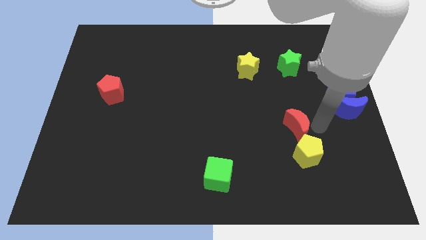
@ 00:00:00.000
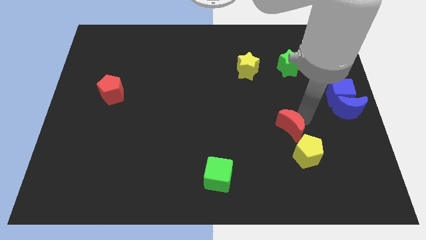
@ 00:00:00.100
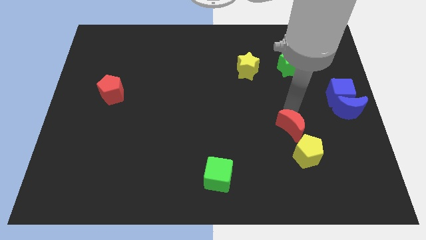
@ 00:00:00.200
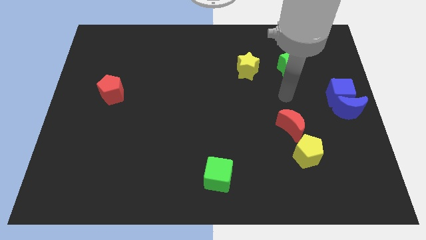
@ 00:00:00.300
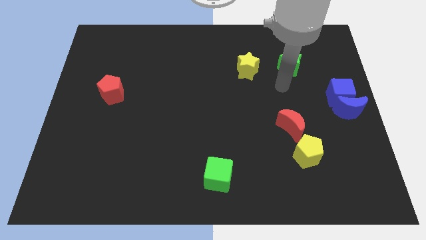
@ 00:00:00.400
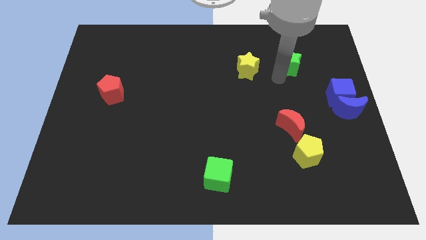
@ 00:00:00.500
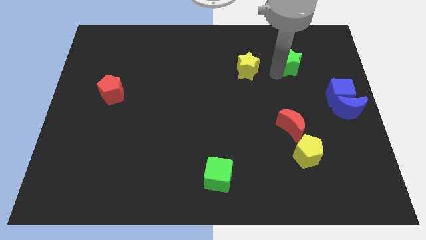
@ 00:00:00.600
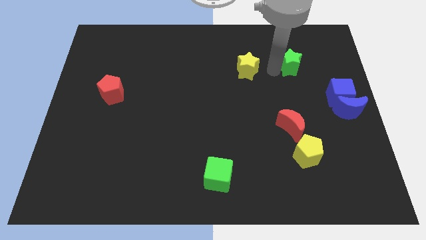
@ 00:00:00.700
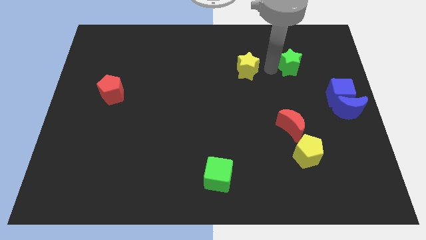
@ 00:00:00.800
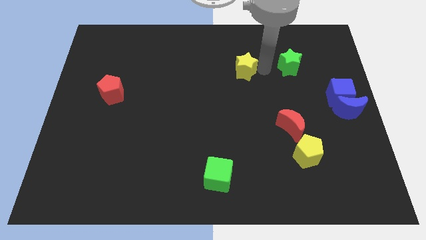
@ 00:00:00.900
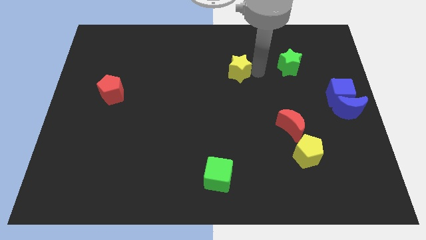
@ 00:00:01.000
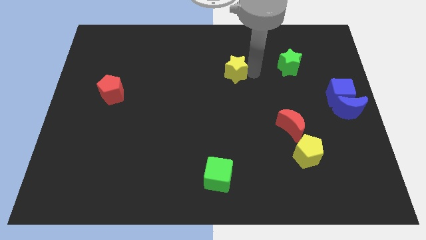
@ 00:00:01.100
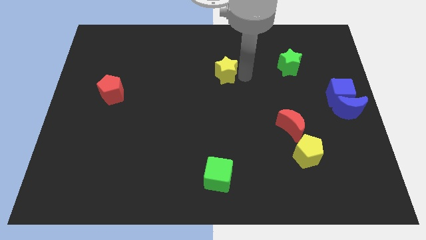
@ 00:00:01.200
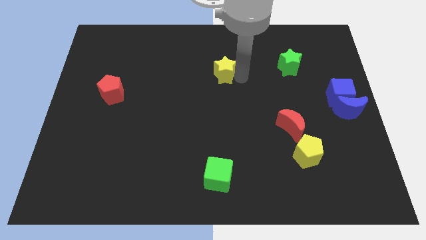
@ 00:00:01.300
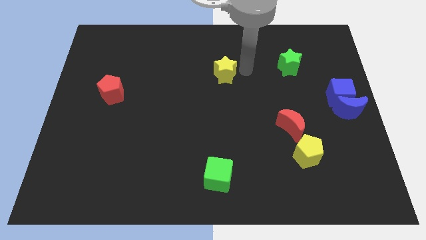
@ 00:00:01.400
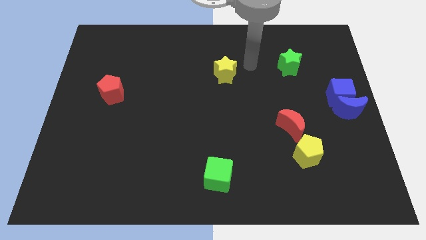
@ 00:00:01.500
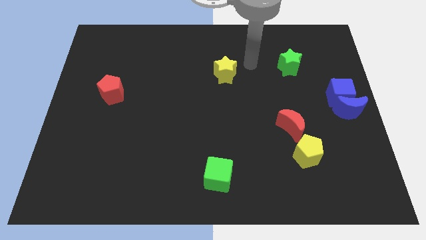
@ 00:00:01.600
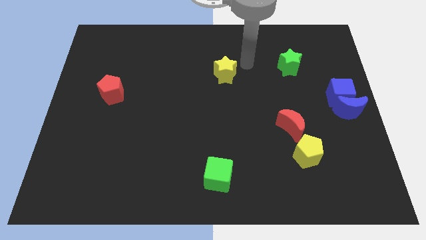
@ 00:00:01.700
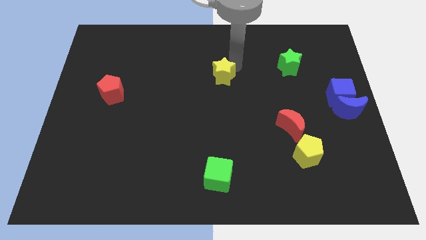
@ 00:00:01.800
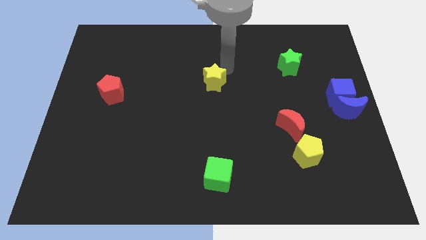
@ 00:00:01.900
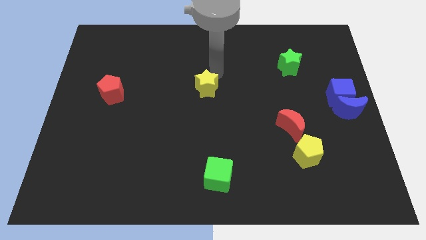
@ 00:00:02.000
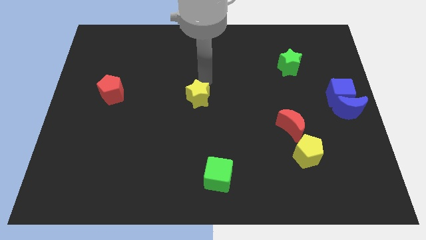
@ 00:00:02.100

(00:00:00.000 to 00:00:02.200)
move yellow star to the center

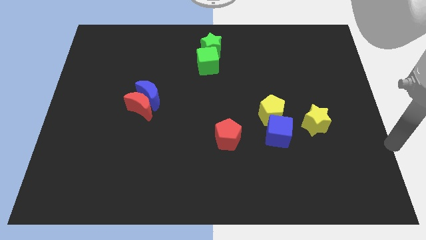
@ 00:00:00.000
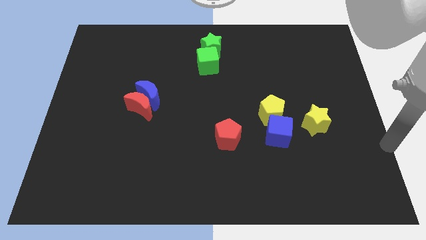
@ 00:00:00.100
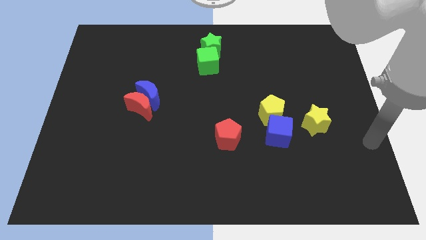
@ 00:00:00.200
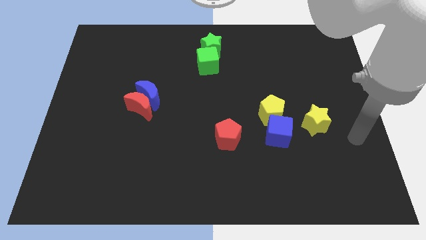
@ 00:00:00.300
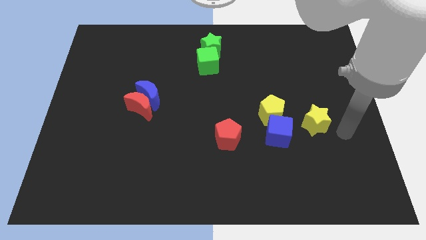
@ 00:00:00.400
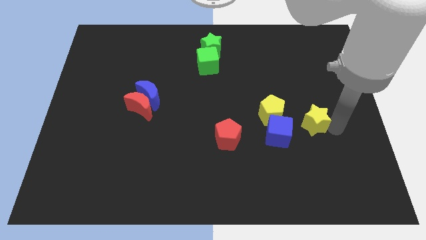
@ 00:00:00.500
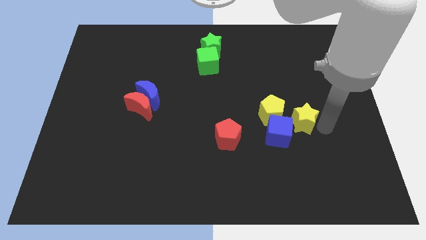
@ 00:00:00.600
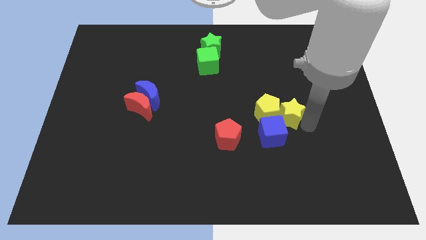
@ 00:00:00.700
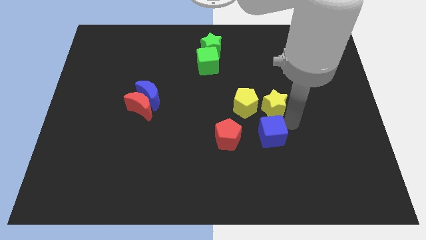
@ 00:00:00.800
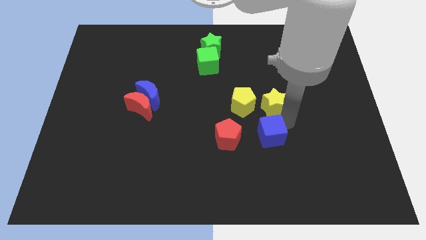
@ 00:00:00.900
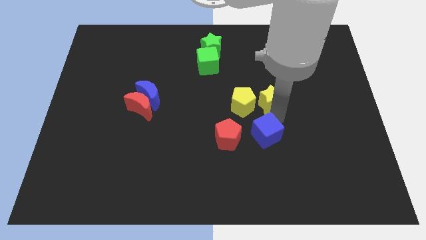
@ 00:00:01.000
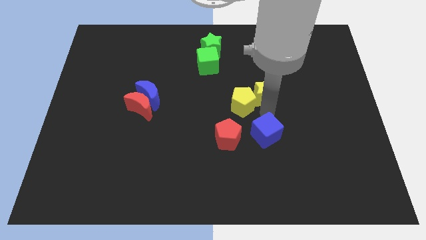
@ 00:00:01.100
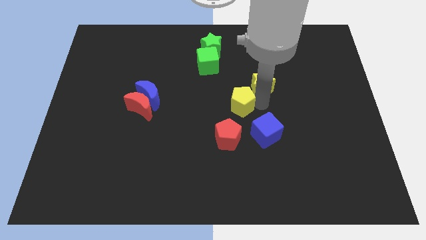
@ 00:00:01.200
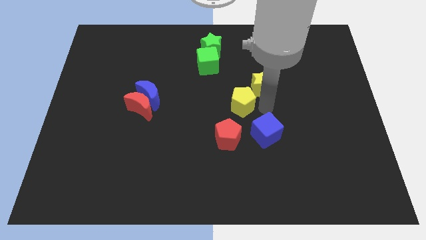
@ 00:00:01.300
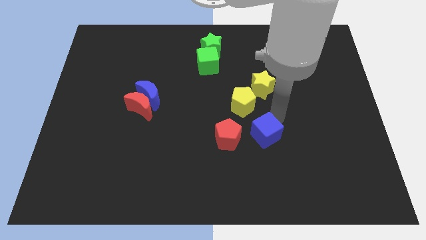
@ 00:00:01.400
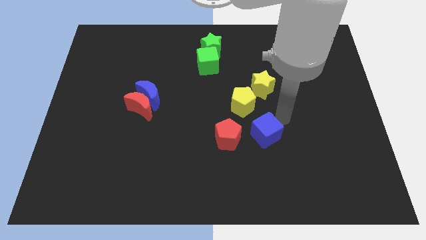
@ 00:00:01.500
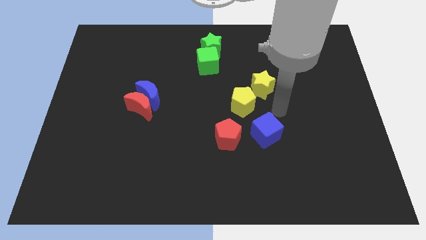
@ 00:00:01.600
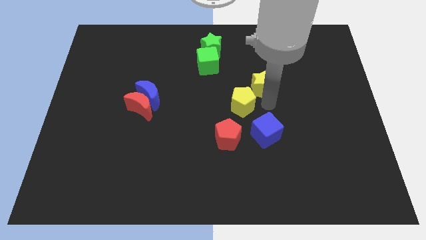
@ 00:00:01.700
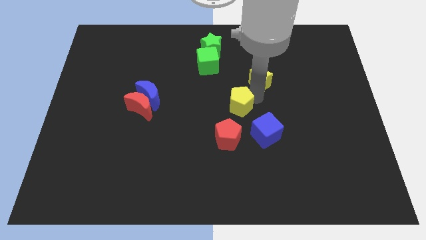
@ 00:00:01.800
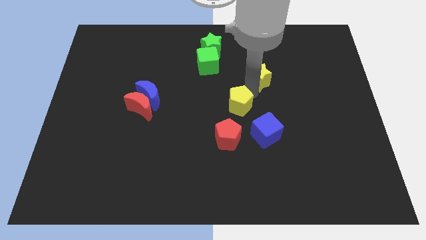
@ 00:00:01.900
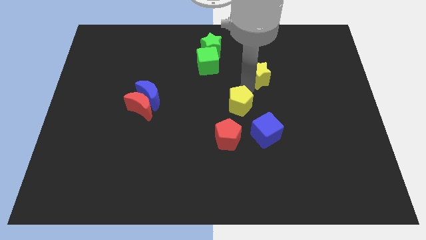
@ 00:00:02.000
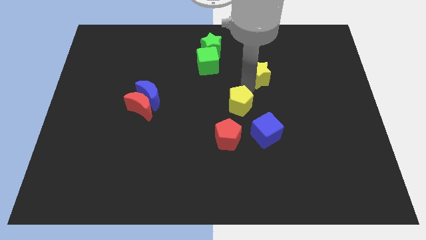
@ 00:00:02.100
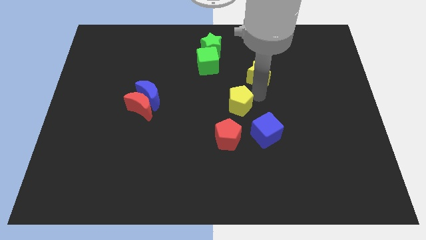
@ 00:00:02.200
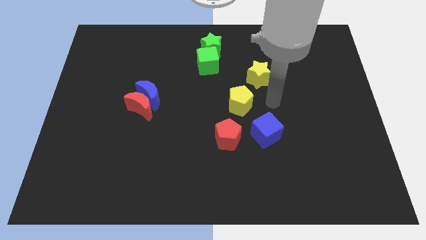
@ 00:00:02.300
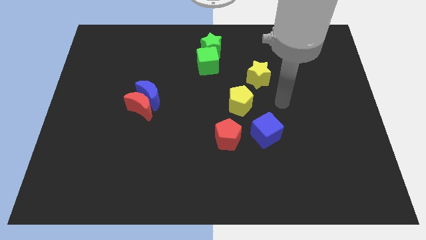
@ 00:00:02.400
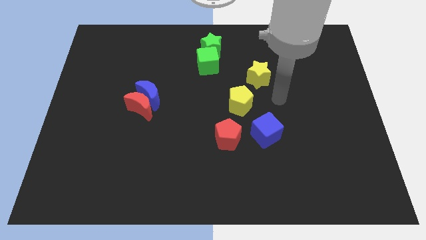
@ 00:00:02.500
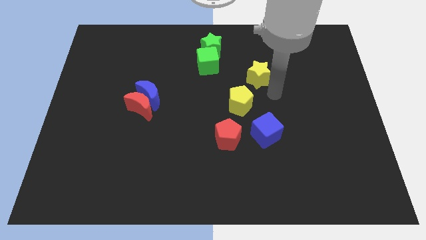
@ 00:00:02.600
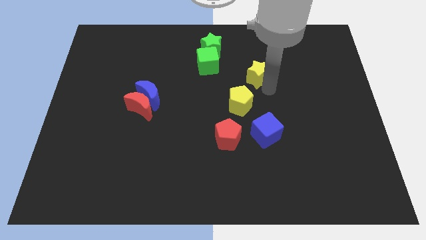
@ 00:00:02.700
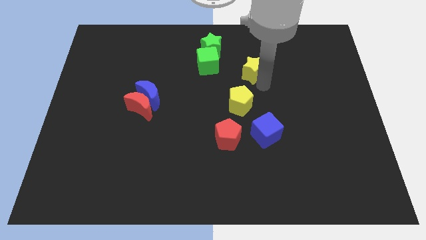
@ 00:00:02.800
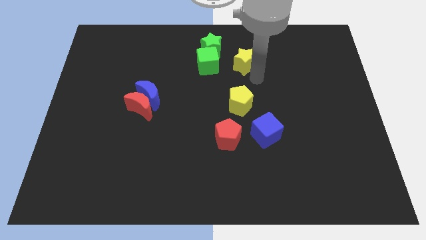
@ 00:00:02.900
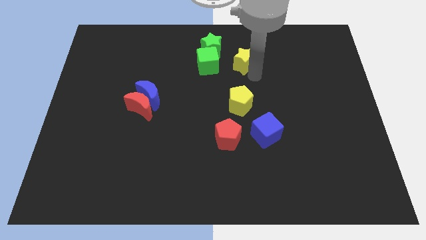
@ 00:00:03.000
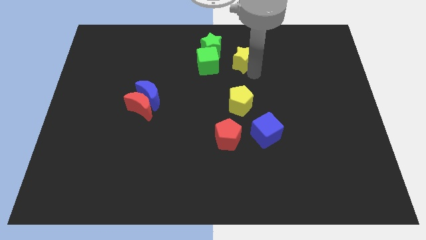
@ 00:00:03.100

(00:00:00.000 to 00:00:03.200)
separate yellow star from yellow pentagon

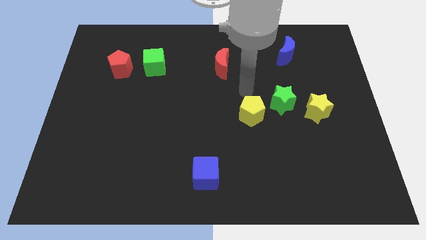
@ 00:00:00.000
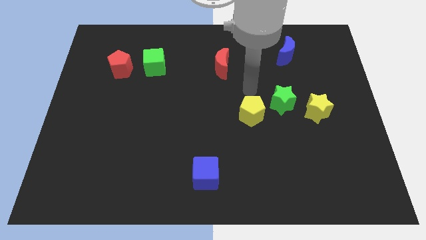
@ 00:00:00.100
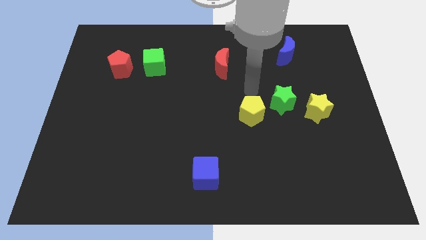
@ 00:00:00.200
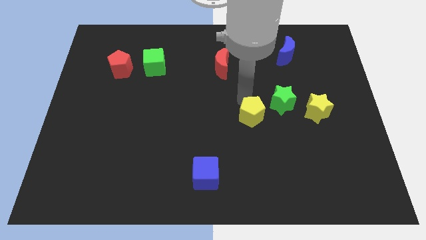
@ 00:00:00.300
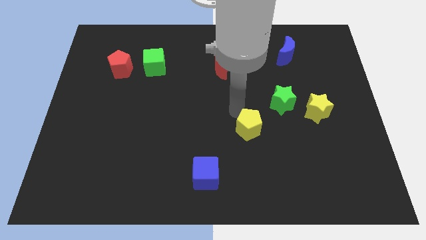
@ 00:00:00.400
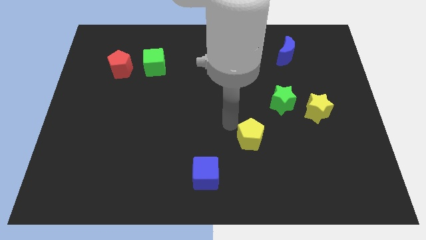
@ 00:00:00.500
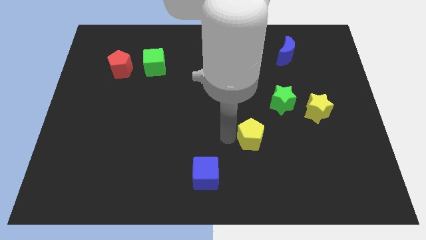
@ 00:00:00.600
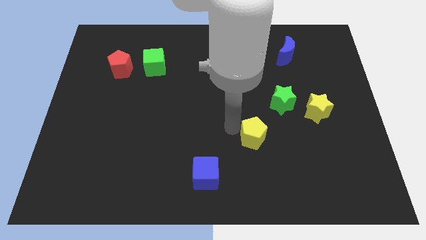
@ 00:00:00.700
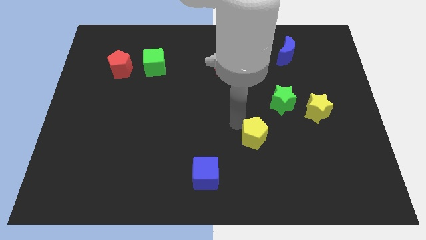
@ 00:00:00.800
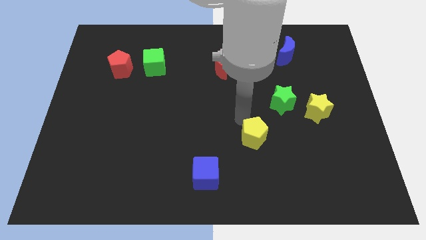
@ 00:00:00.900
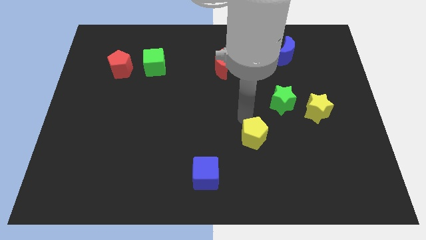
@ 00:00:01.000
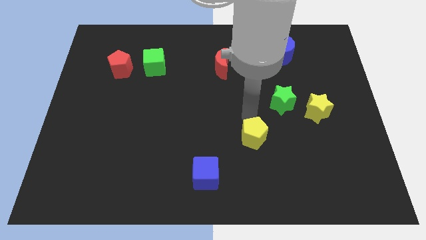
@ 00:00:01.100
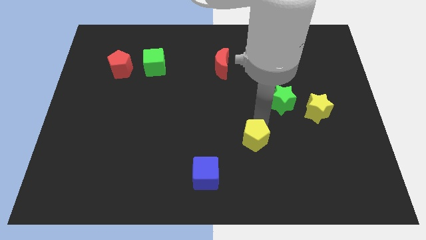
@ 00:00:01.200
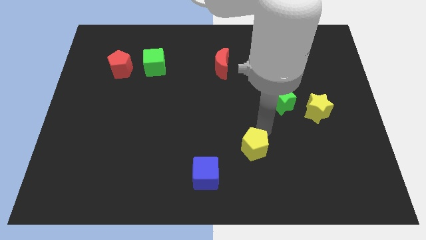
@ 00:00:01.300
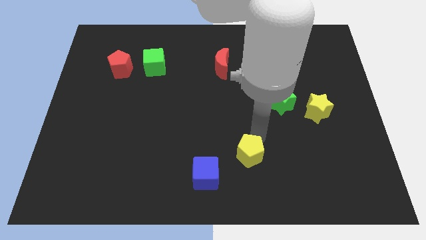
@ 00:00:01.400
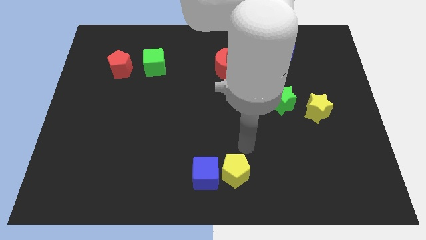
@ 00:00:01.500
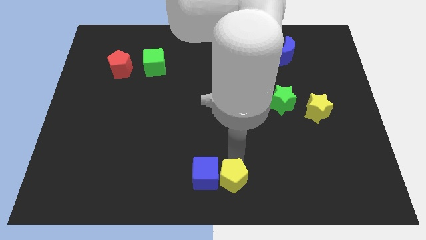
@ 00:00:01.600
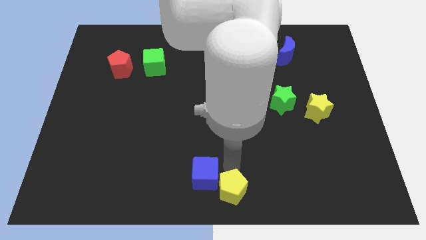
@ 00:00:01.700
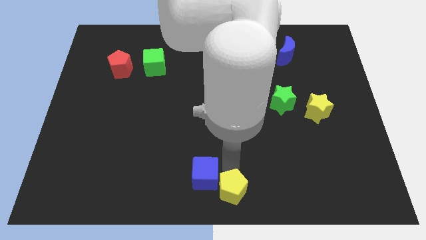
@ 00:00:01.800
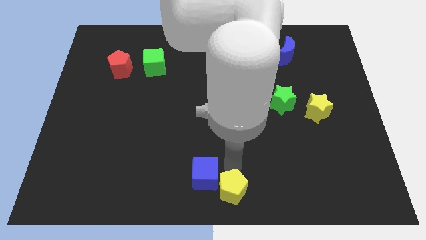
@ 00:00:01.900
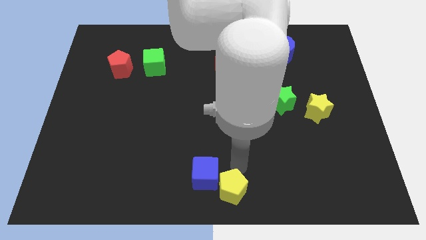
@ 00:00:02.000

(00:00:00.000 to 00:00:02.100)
add yellow pentagon into blue cube

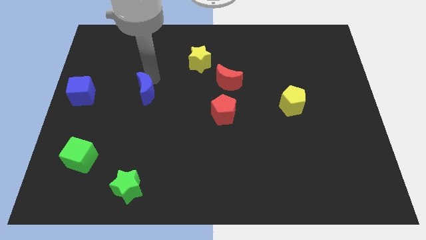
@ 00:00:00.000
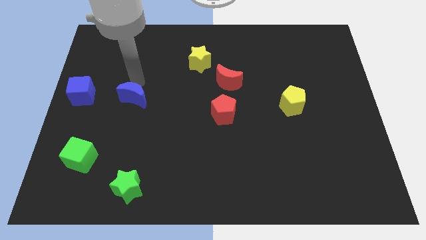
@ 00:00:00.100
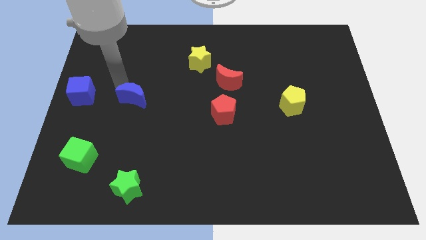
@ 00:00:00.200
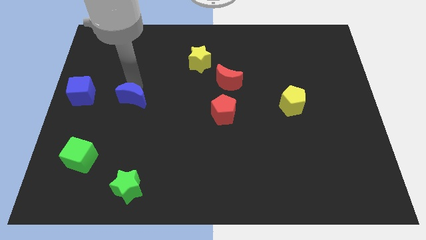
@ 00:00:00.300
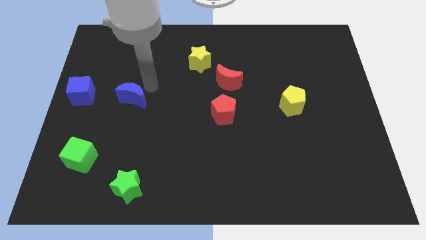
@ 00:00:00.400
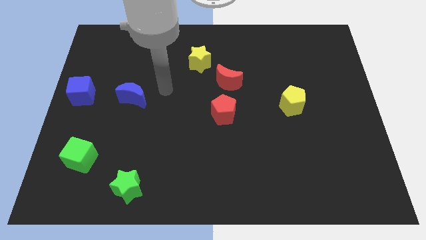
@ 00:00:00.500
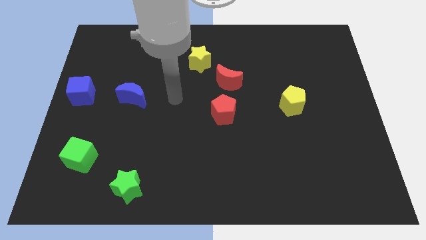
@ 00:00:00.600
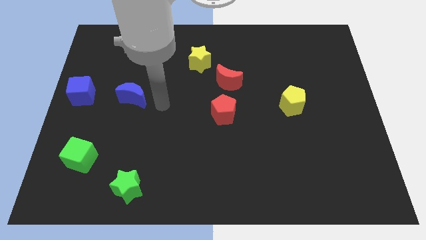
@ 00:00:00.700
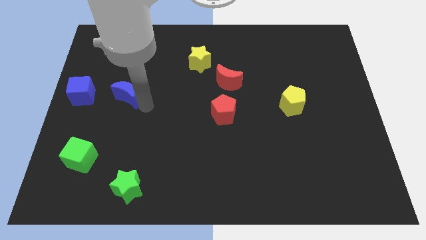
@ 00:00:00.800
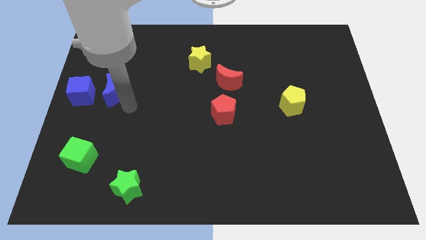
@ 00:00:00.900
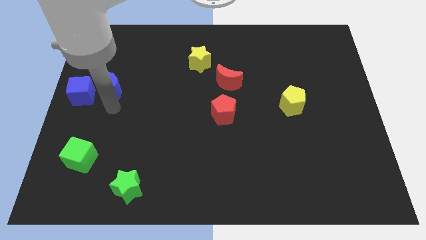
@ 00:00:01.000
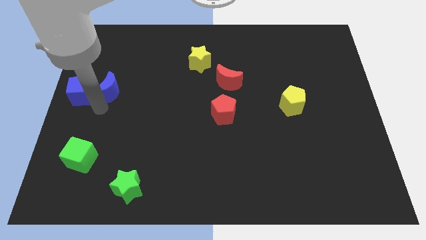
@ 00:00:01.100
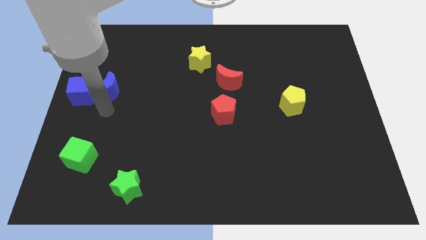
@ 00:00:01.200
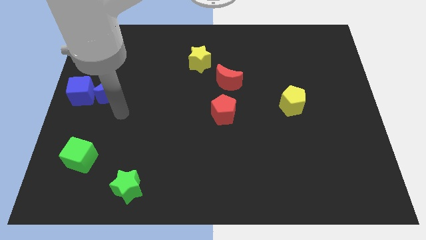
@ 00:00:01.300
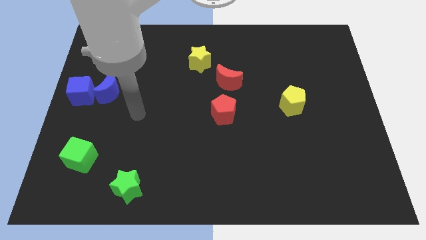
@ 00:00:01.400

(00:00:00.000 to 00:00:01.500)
move the blue crescent towards the blue cube
